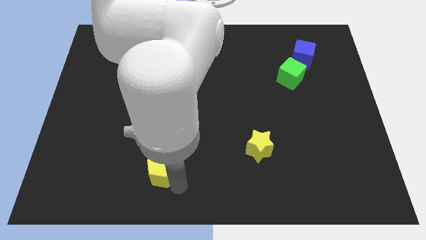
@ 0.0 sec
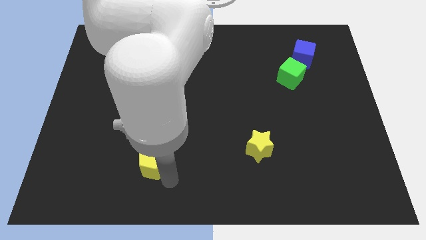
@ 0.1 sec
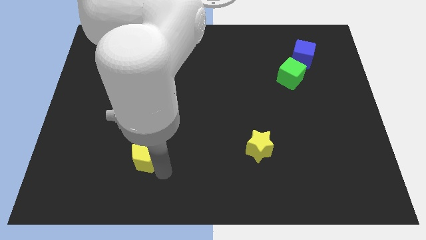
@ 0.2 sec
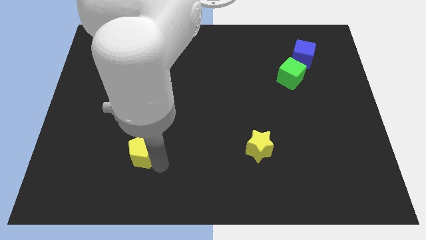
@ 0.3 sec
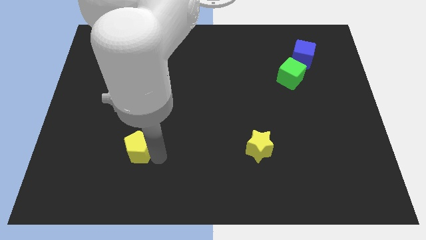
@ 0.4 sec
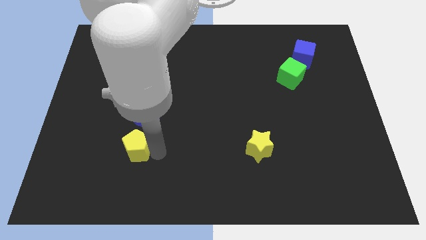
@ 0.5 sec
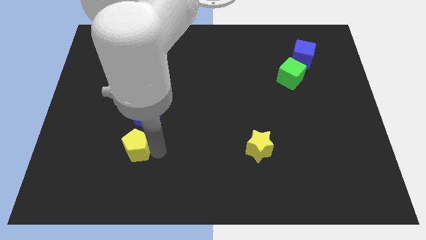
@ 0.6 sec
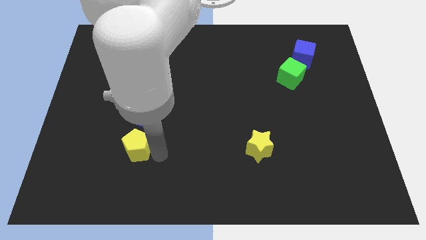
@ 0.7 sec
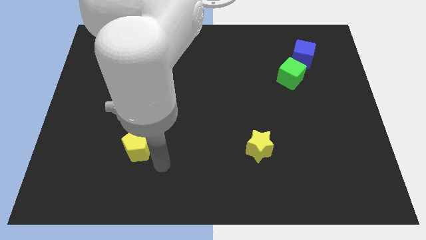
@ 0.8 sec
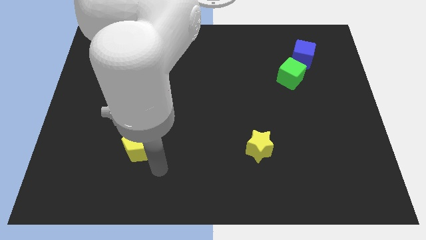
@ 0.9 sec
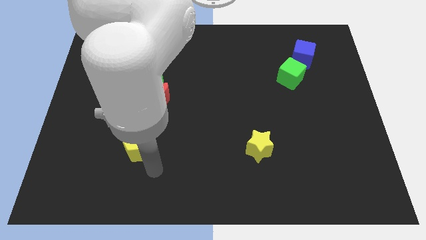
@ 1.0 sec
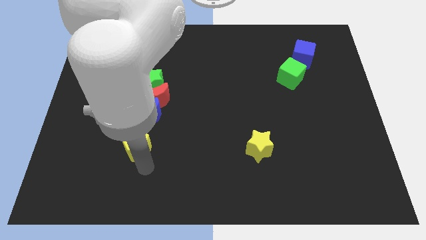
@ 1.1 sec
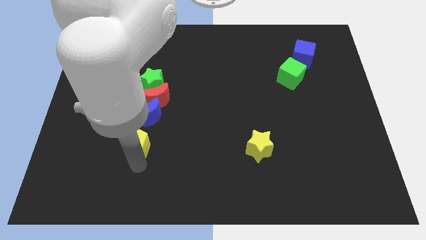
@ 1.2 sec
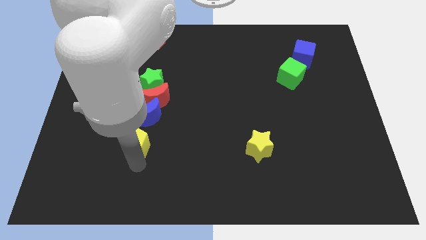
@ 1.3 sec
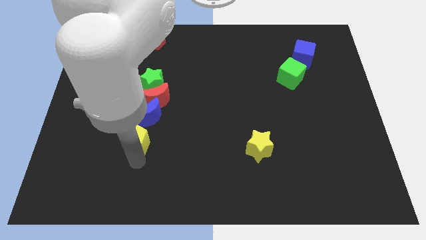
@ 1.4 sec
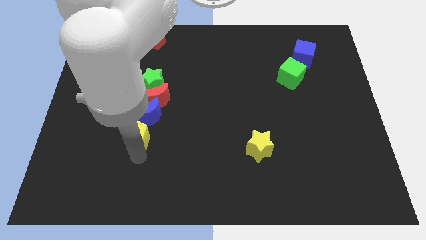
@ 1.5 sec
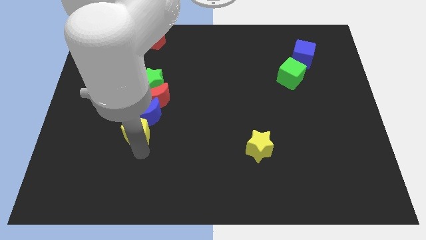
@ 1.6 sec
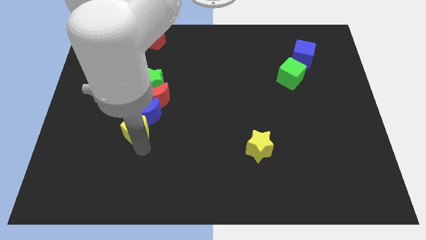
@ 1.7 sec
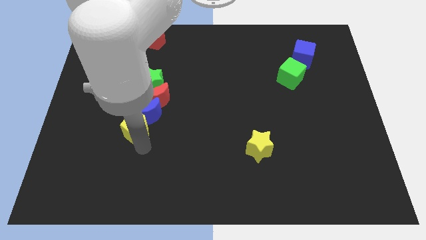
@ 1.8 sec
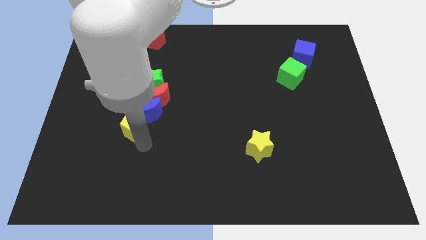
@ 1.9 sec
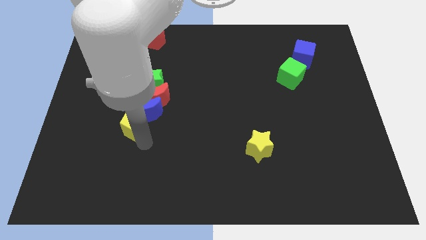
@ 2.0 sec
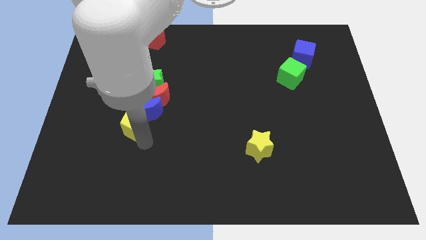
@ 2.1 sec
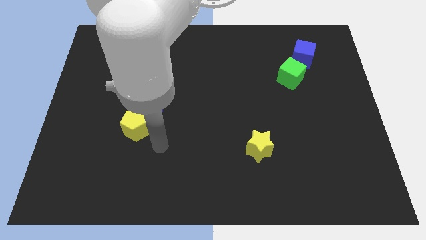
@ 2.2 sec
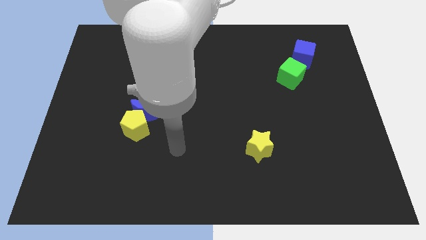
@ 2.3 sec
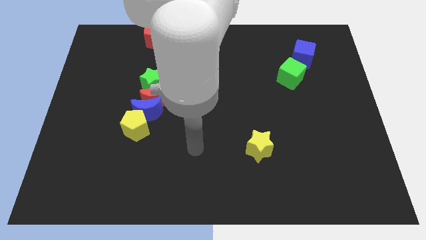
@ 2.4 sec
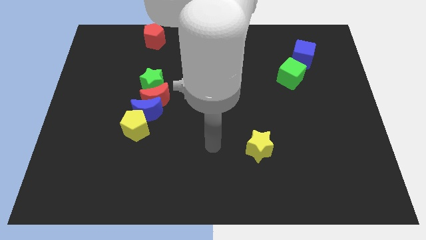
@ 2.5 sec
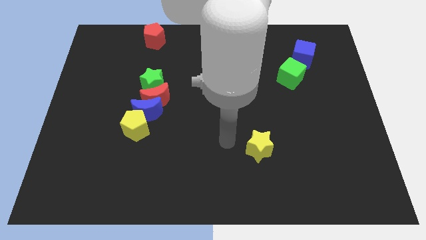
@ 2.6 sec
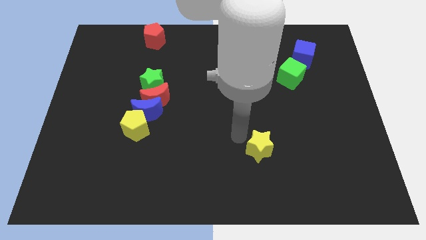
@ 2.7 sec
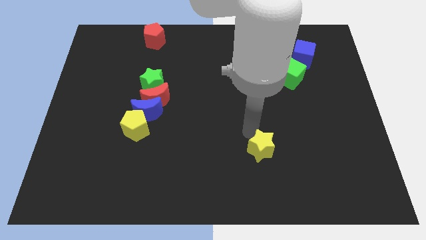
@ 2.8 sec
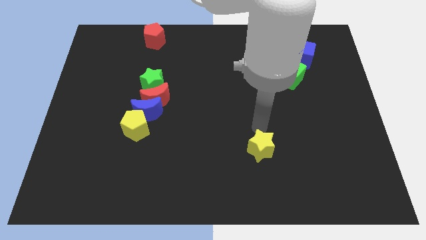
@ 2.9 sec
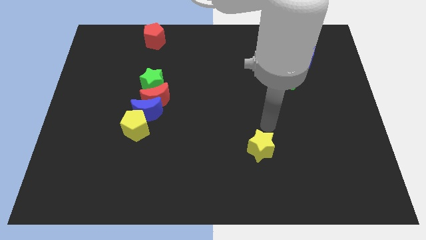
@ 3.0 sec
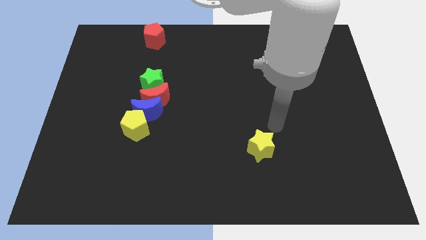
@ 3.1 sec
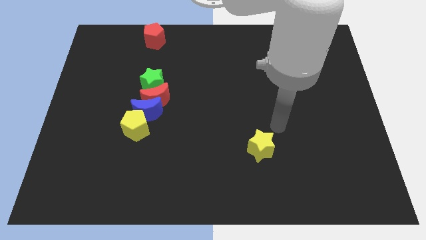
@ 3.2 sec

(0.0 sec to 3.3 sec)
move the yellow pentagon below the blue moon

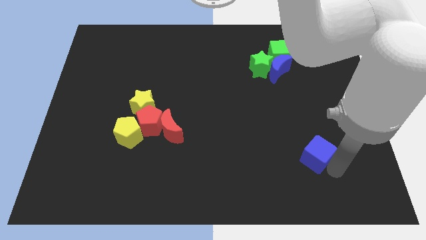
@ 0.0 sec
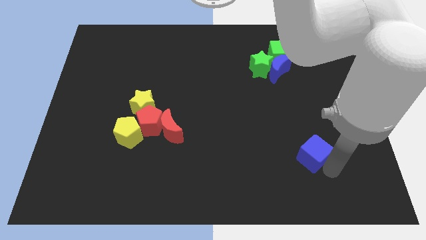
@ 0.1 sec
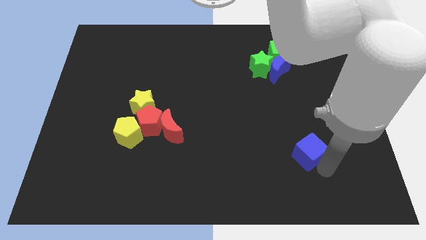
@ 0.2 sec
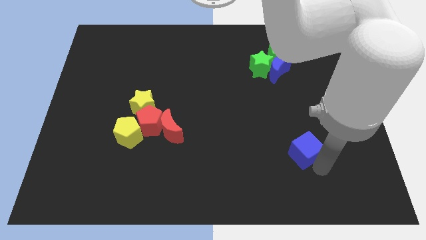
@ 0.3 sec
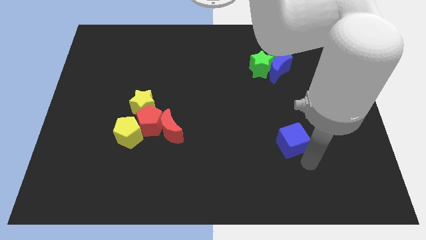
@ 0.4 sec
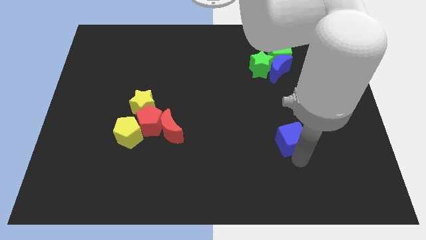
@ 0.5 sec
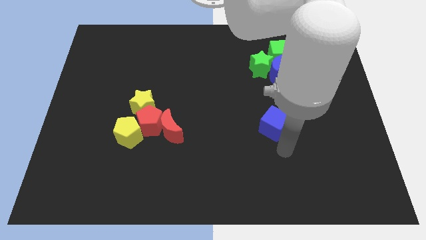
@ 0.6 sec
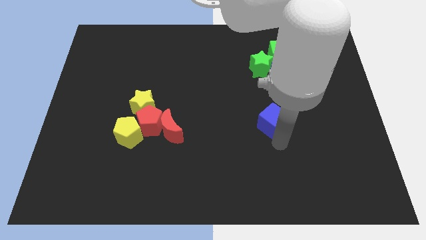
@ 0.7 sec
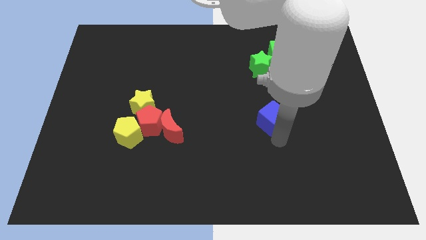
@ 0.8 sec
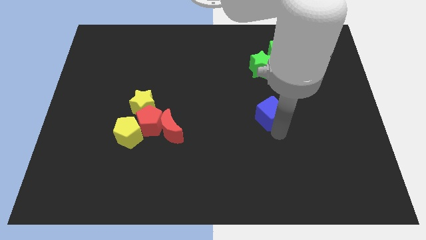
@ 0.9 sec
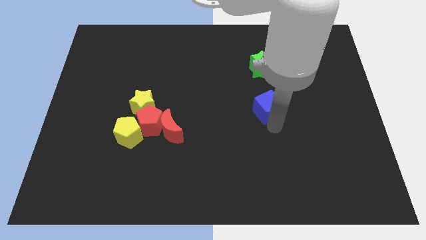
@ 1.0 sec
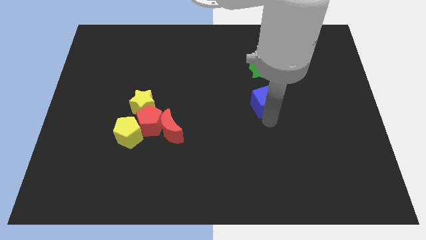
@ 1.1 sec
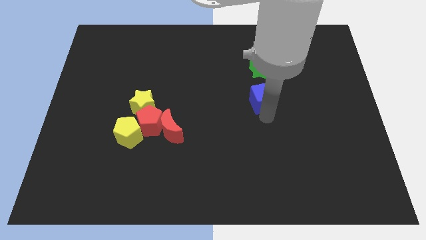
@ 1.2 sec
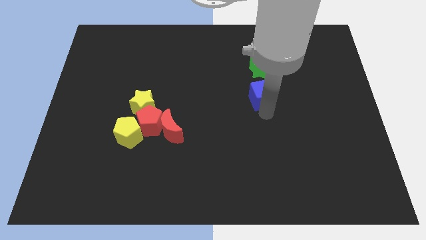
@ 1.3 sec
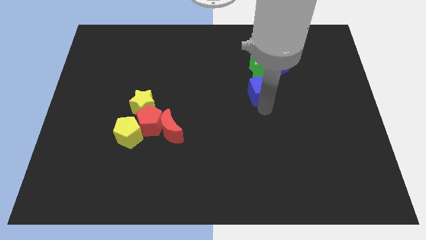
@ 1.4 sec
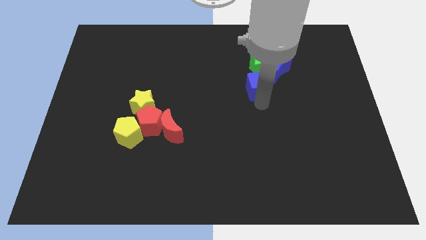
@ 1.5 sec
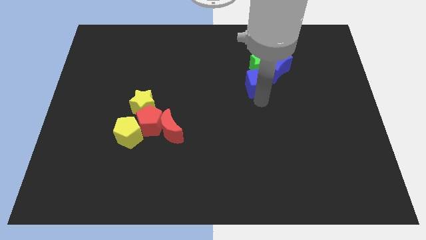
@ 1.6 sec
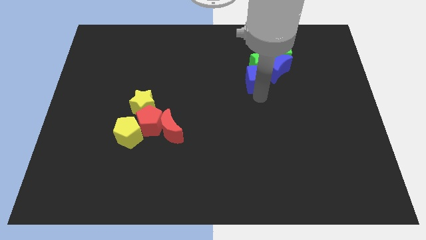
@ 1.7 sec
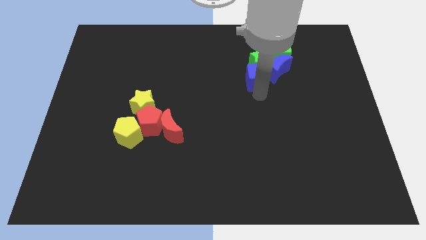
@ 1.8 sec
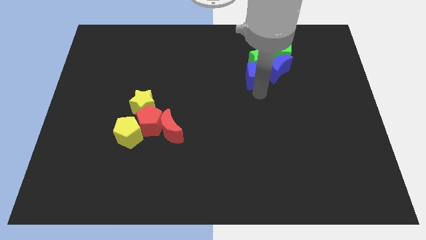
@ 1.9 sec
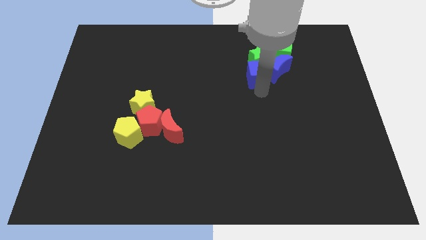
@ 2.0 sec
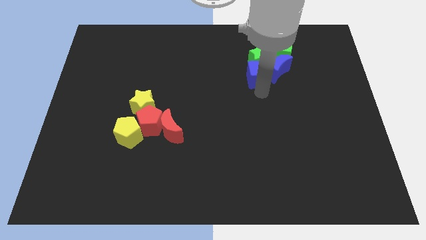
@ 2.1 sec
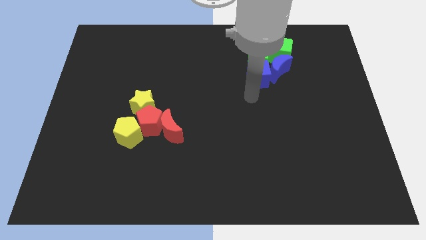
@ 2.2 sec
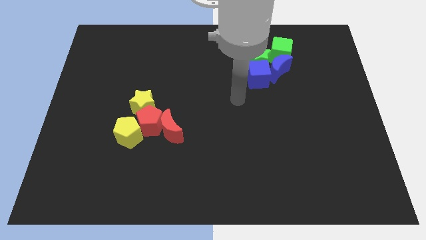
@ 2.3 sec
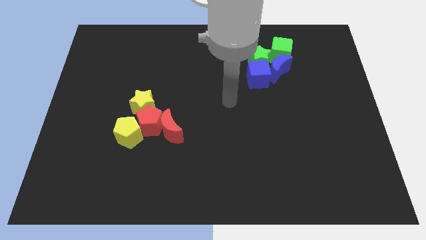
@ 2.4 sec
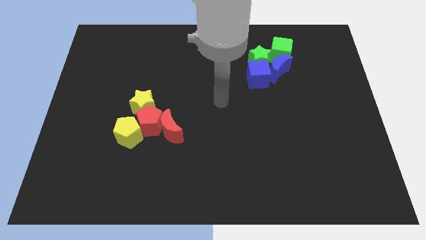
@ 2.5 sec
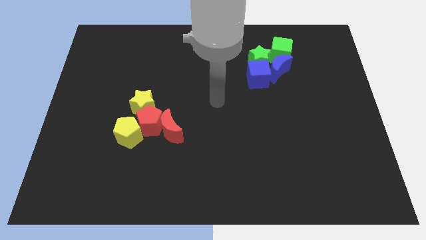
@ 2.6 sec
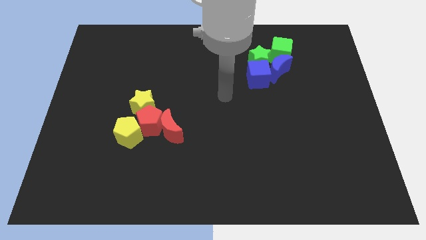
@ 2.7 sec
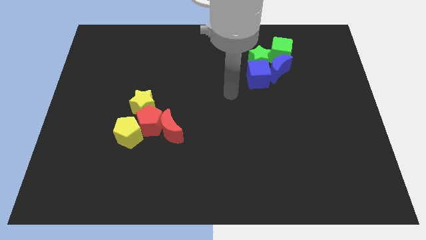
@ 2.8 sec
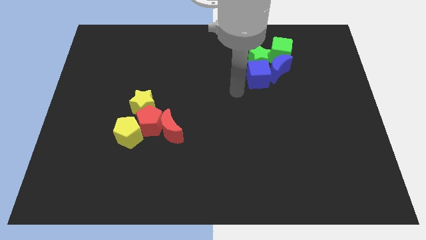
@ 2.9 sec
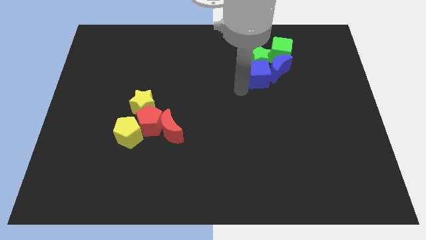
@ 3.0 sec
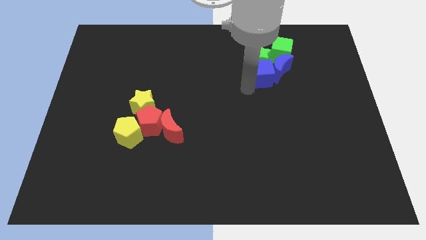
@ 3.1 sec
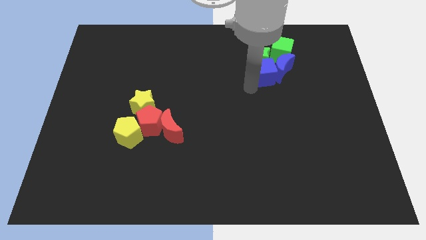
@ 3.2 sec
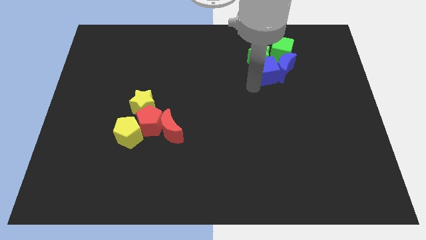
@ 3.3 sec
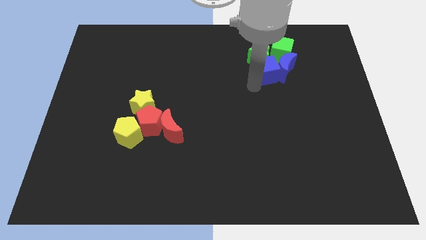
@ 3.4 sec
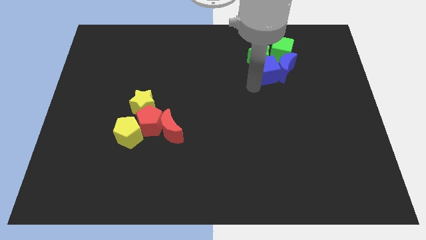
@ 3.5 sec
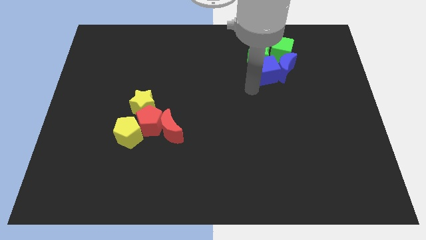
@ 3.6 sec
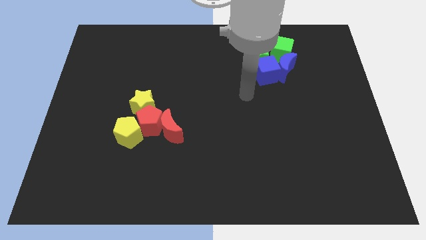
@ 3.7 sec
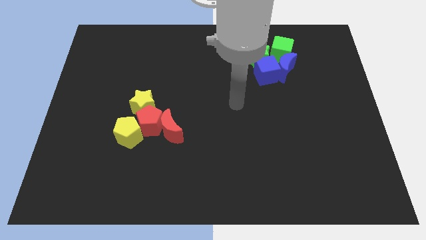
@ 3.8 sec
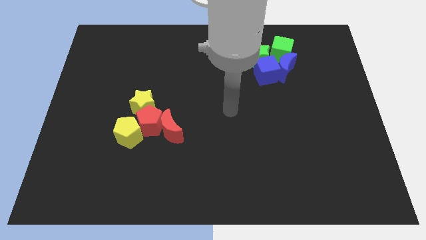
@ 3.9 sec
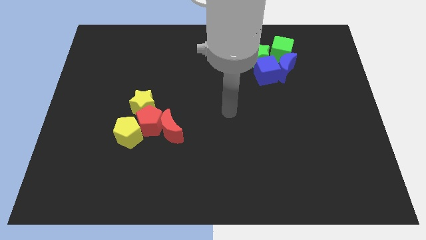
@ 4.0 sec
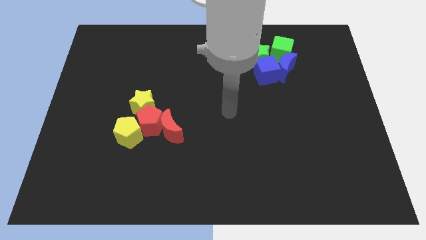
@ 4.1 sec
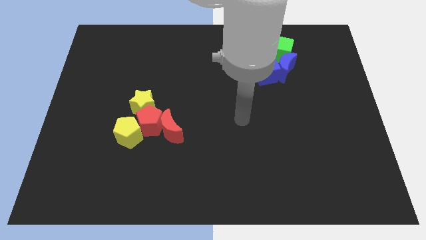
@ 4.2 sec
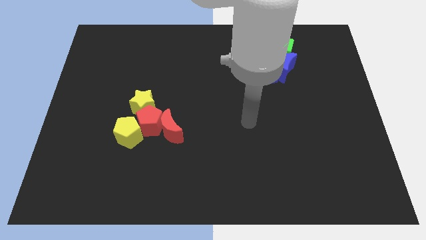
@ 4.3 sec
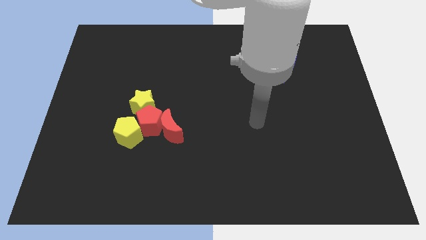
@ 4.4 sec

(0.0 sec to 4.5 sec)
move the blue cube to the left of the blue crescent

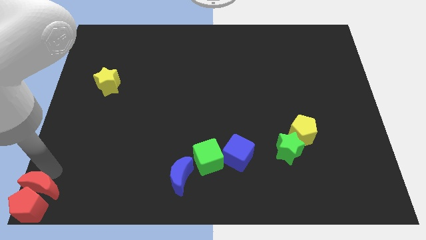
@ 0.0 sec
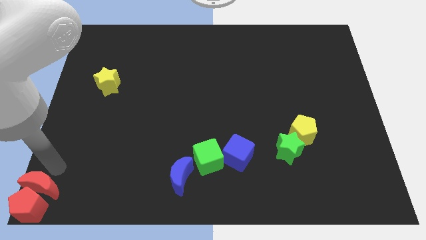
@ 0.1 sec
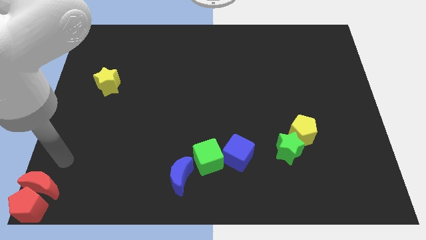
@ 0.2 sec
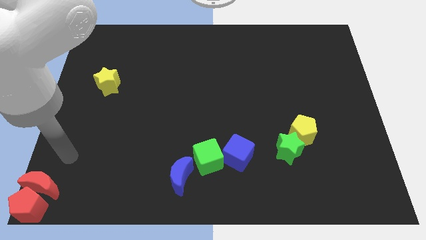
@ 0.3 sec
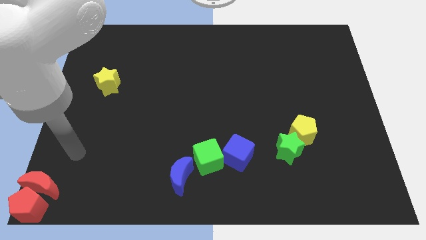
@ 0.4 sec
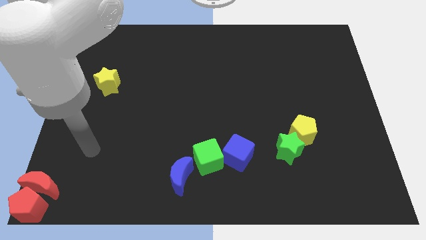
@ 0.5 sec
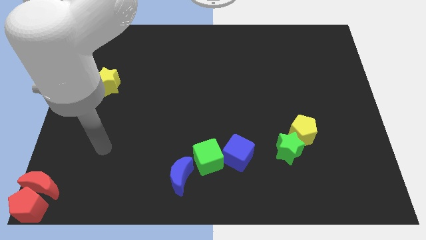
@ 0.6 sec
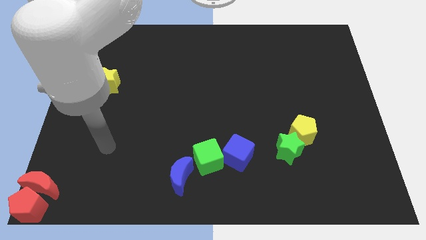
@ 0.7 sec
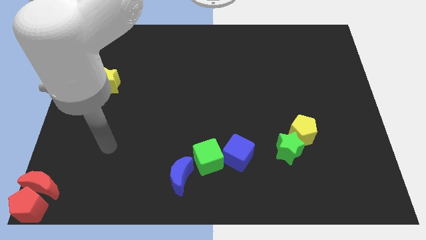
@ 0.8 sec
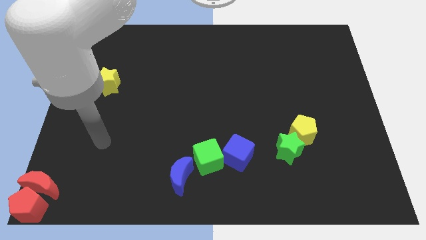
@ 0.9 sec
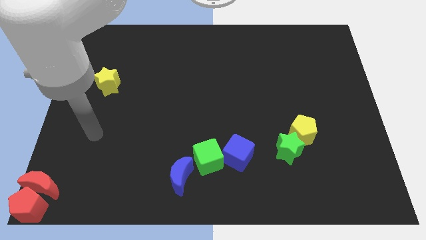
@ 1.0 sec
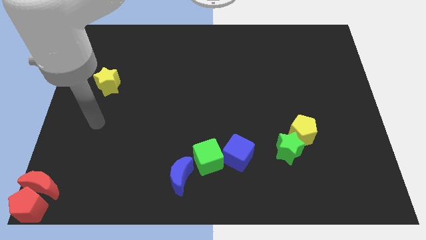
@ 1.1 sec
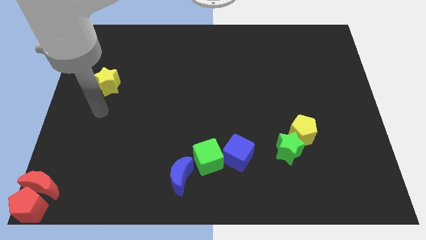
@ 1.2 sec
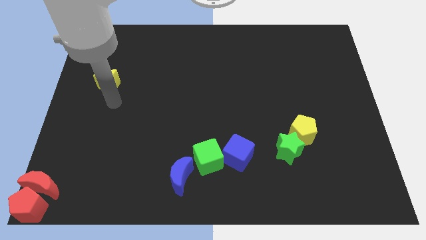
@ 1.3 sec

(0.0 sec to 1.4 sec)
go away from the red moon
